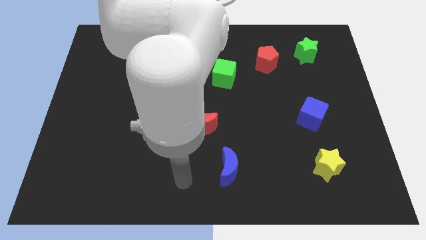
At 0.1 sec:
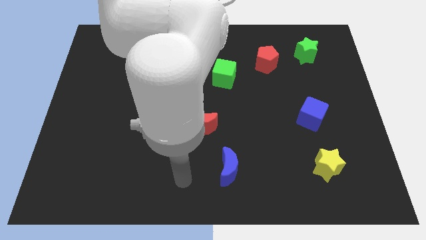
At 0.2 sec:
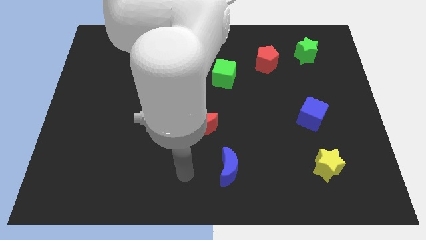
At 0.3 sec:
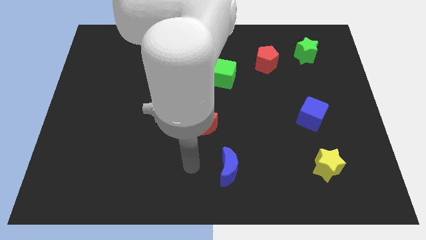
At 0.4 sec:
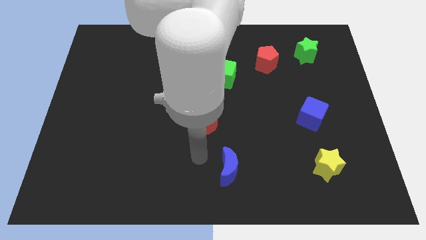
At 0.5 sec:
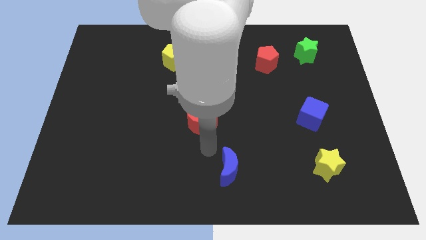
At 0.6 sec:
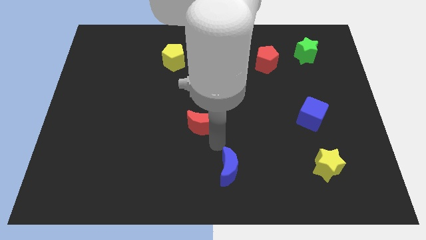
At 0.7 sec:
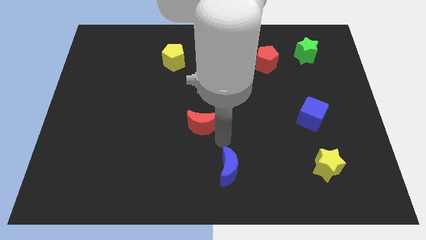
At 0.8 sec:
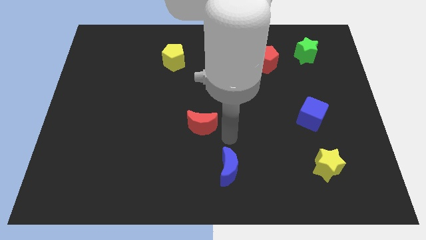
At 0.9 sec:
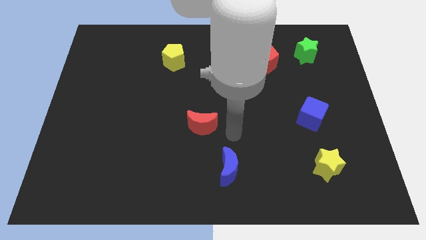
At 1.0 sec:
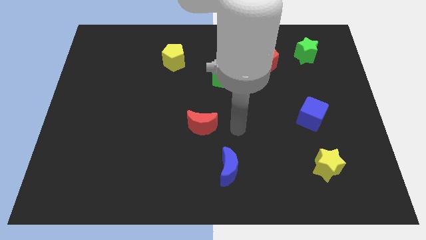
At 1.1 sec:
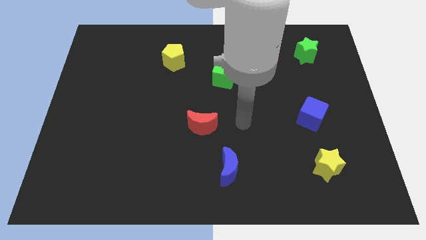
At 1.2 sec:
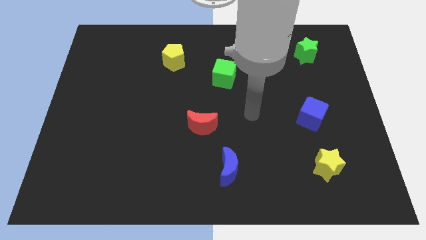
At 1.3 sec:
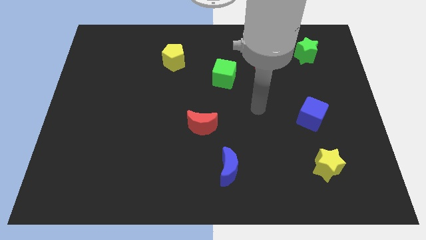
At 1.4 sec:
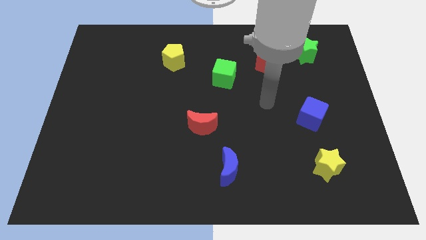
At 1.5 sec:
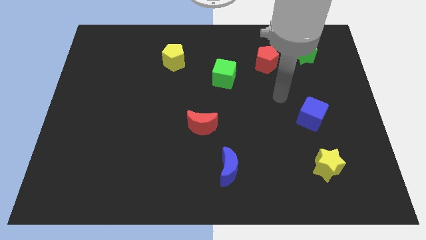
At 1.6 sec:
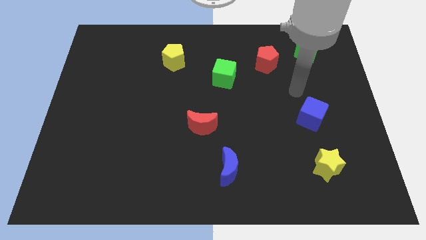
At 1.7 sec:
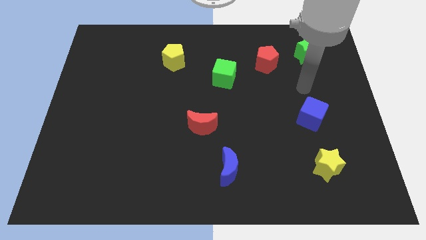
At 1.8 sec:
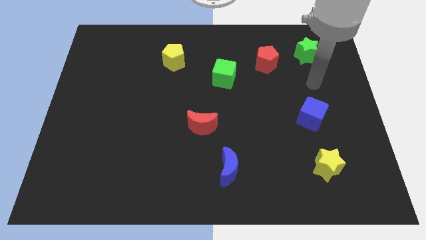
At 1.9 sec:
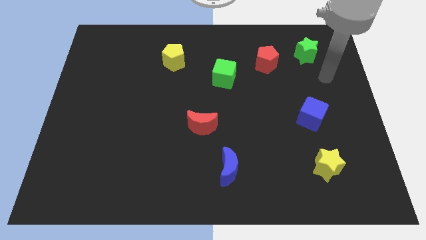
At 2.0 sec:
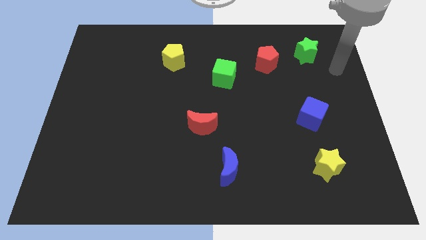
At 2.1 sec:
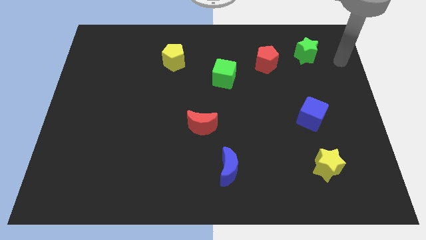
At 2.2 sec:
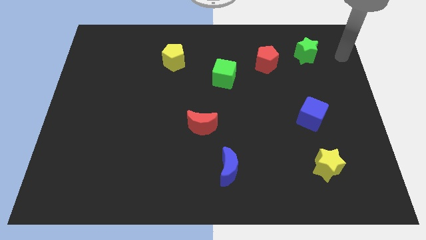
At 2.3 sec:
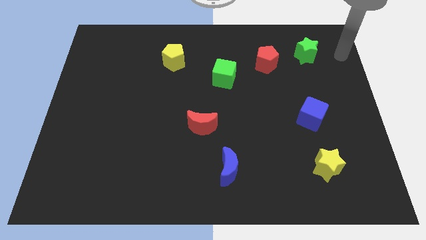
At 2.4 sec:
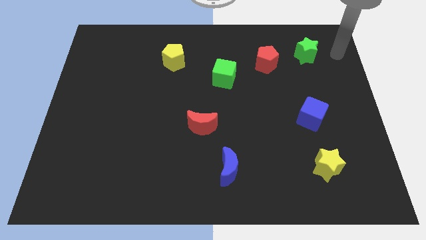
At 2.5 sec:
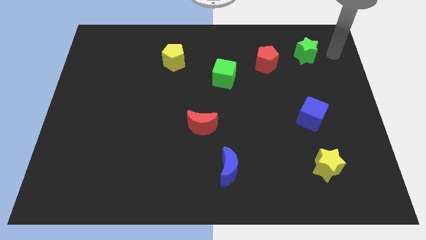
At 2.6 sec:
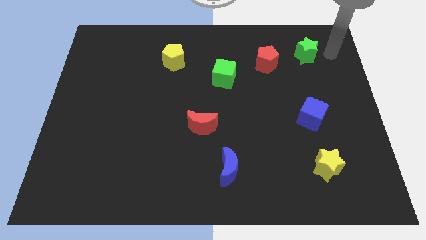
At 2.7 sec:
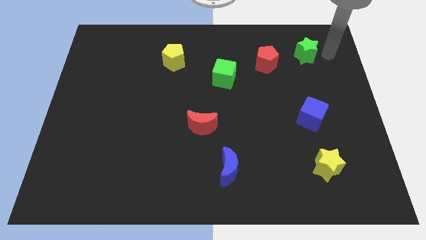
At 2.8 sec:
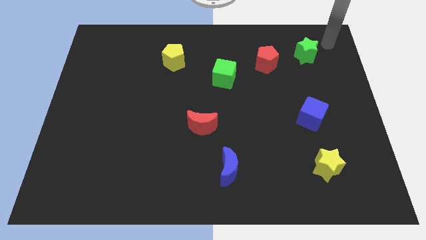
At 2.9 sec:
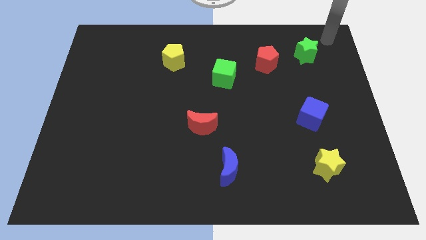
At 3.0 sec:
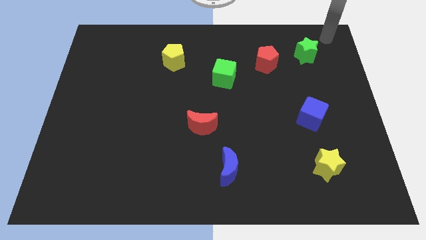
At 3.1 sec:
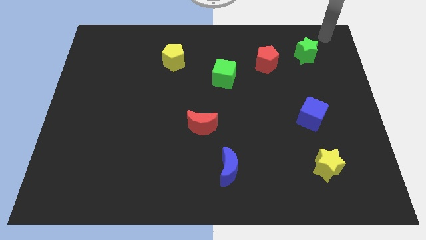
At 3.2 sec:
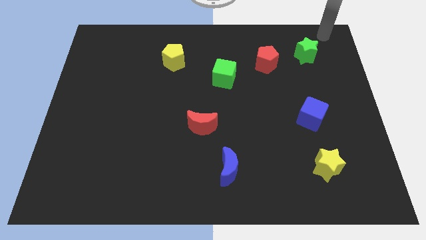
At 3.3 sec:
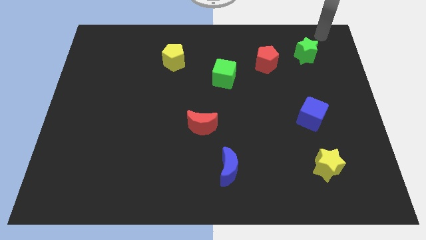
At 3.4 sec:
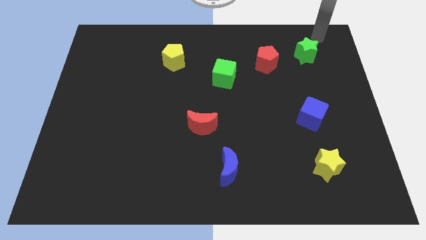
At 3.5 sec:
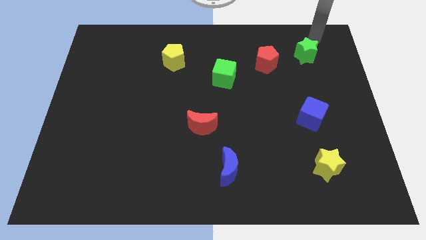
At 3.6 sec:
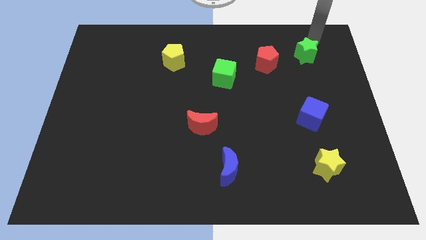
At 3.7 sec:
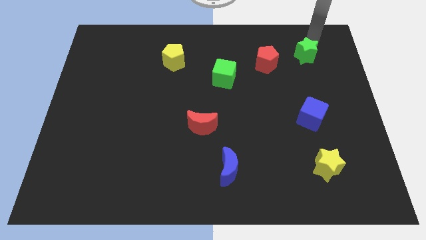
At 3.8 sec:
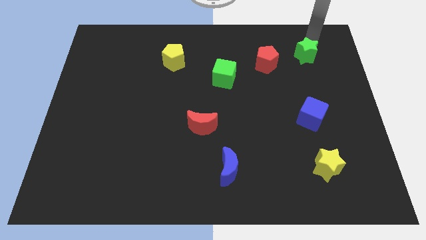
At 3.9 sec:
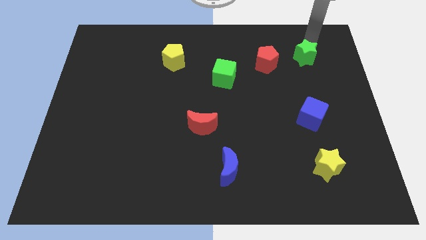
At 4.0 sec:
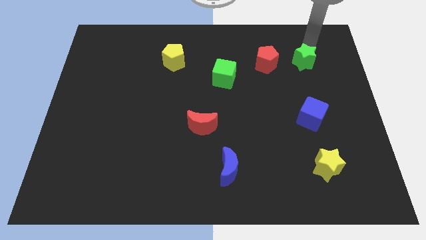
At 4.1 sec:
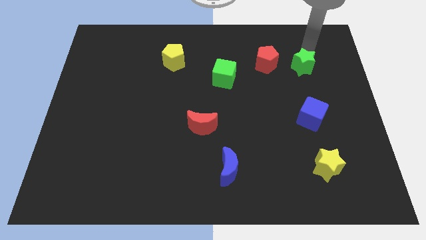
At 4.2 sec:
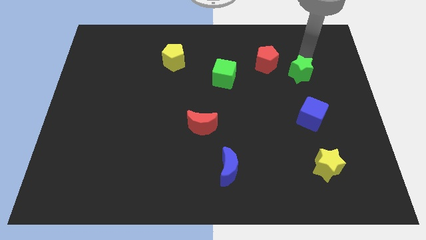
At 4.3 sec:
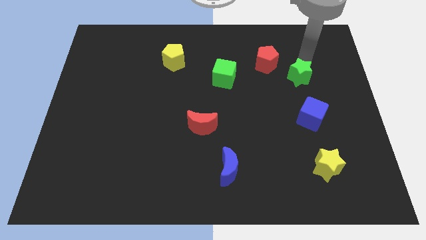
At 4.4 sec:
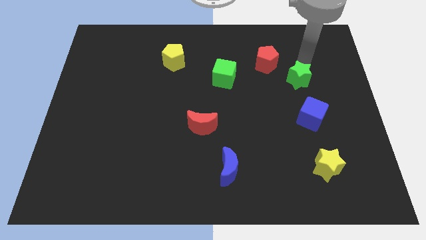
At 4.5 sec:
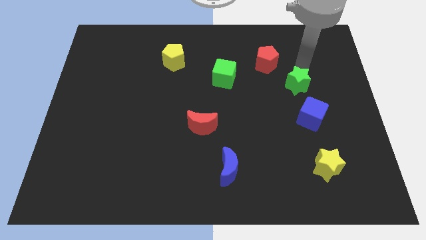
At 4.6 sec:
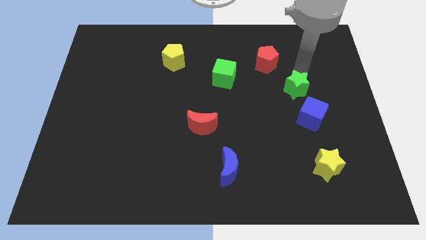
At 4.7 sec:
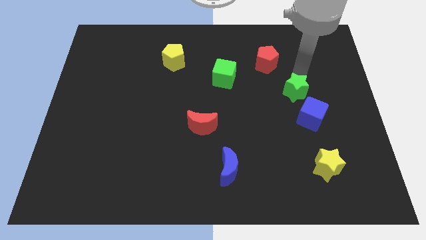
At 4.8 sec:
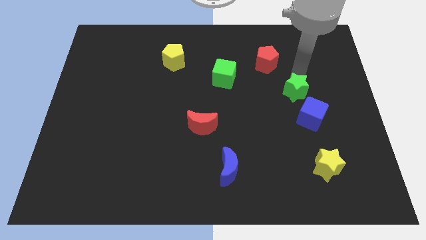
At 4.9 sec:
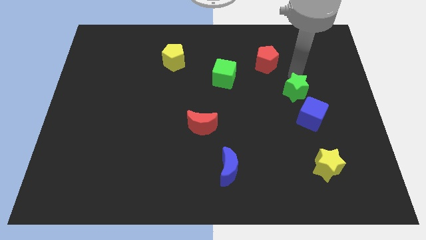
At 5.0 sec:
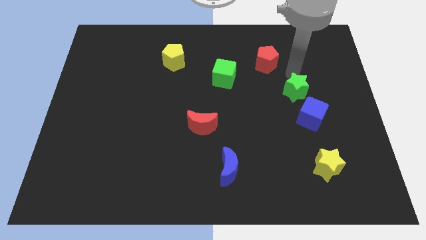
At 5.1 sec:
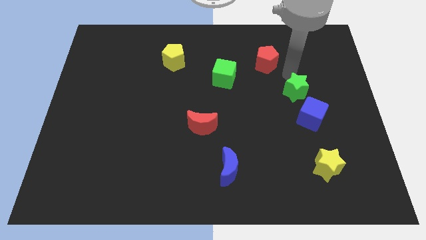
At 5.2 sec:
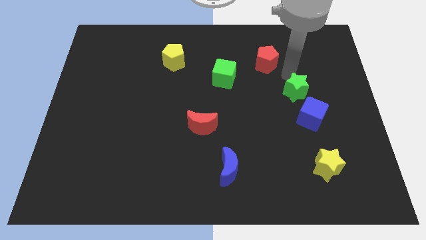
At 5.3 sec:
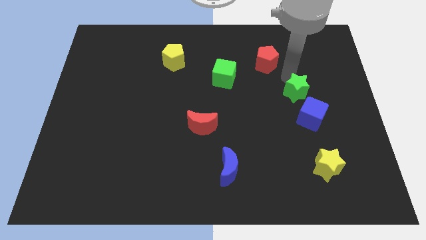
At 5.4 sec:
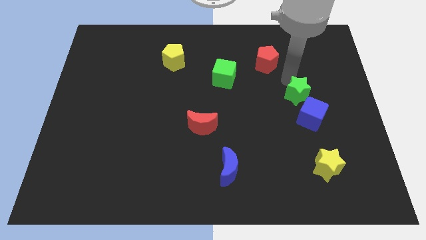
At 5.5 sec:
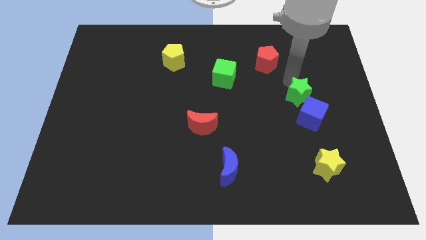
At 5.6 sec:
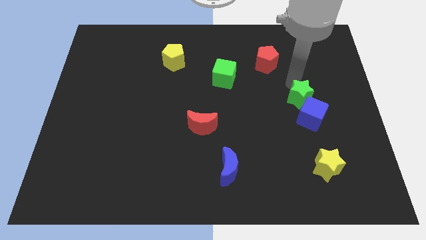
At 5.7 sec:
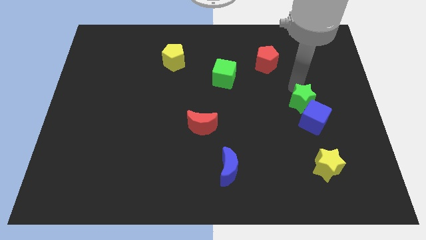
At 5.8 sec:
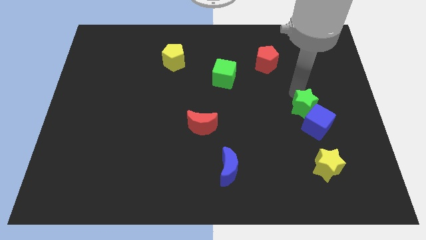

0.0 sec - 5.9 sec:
slide the green star towards the blue cube

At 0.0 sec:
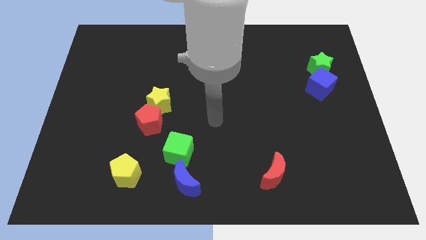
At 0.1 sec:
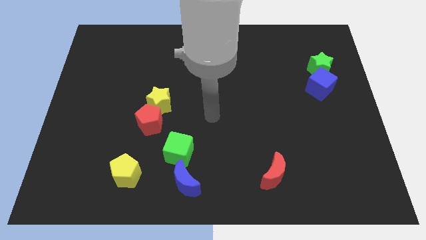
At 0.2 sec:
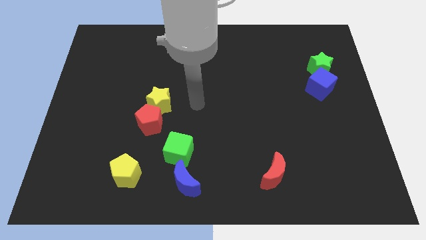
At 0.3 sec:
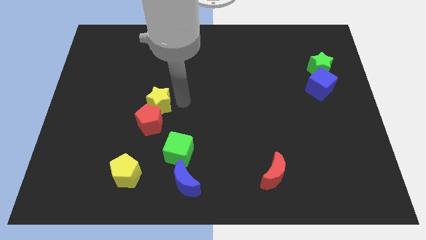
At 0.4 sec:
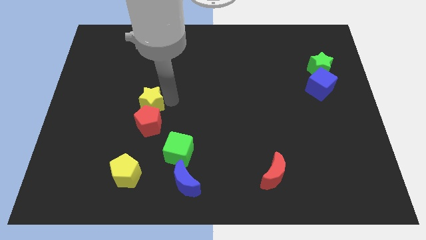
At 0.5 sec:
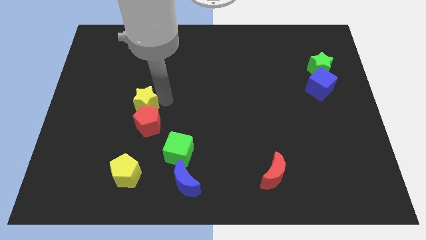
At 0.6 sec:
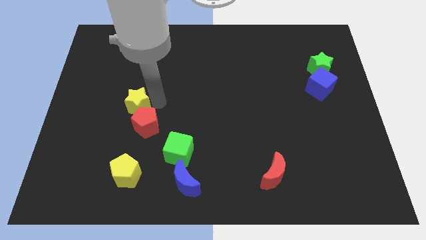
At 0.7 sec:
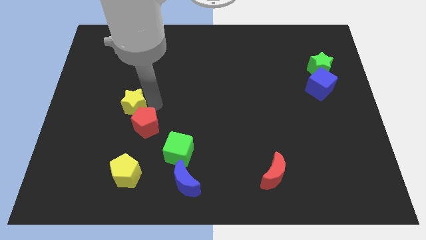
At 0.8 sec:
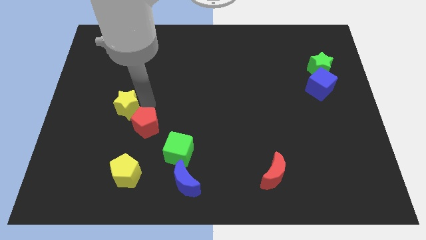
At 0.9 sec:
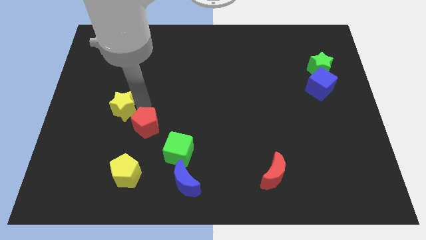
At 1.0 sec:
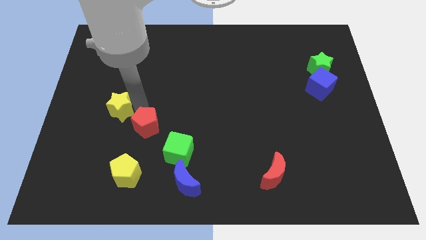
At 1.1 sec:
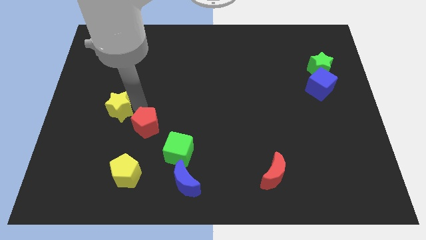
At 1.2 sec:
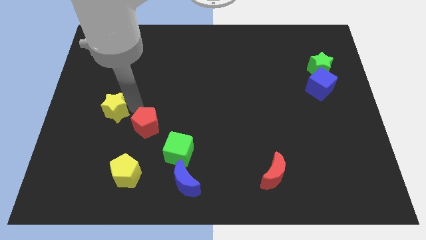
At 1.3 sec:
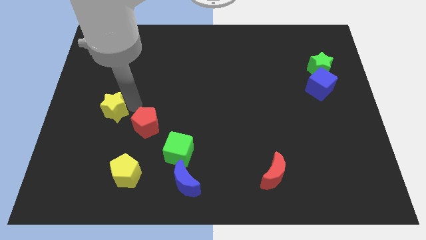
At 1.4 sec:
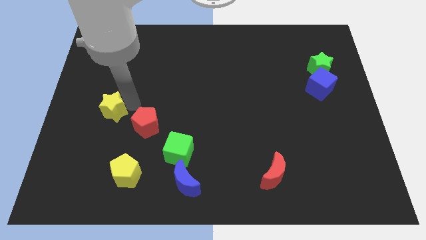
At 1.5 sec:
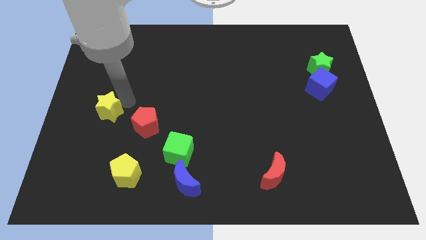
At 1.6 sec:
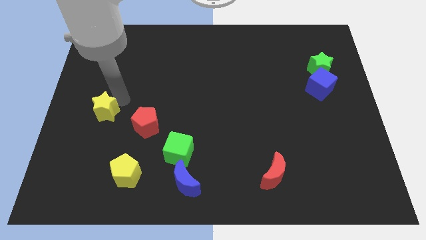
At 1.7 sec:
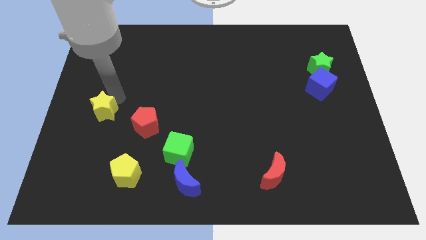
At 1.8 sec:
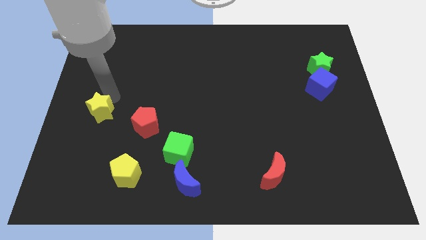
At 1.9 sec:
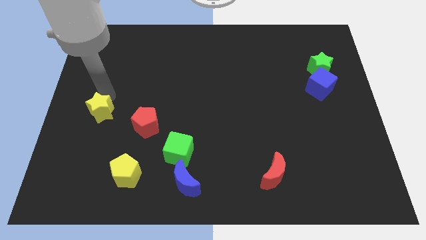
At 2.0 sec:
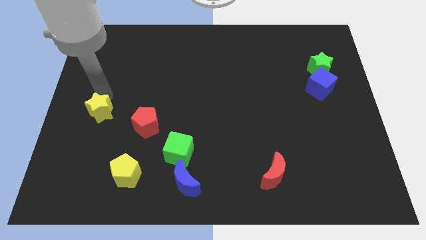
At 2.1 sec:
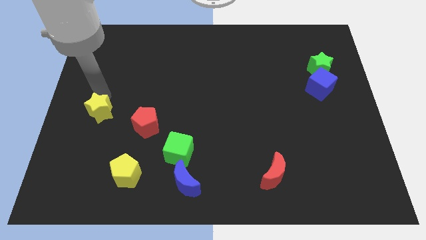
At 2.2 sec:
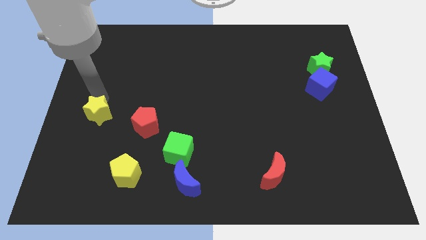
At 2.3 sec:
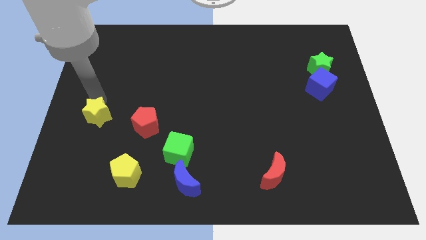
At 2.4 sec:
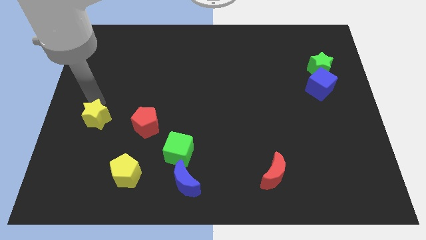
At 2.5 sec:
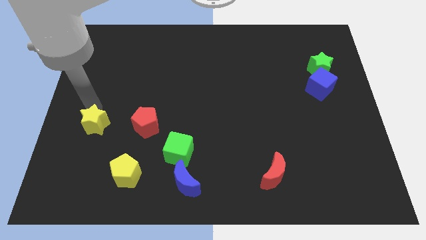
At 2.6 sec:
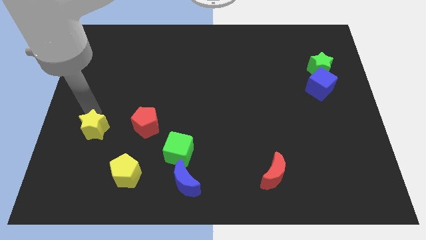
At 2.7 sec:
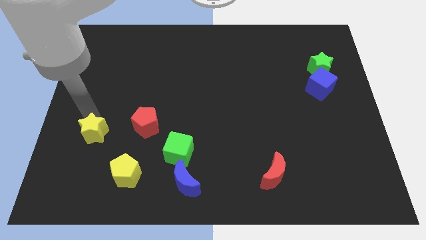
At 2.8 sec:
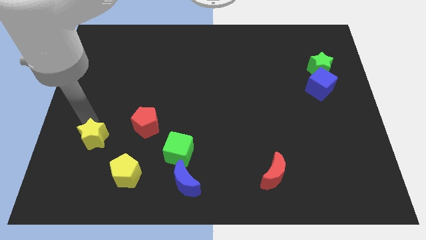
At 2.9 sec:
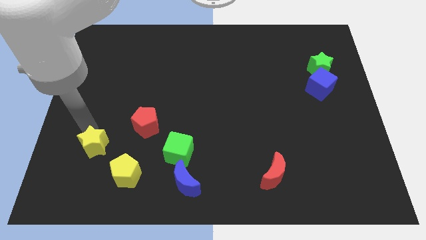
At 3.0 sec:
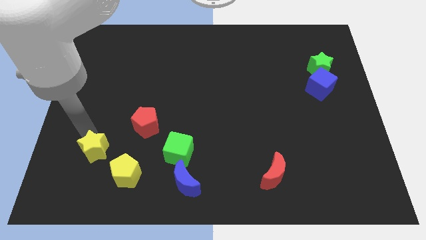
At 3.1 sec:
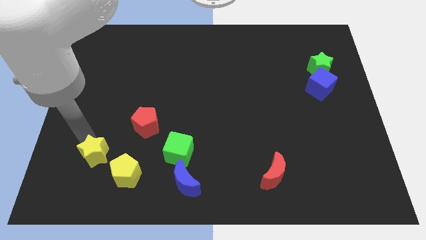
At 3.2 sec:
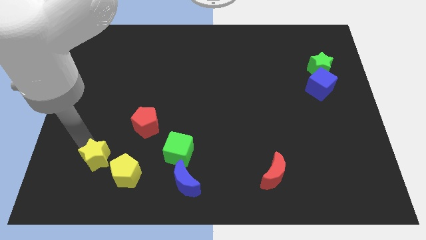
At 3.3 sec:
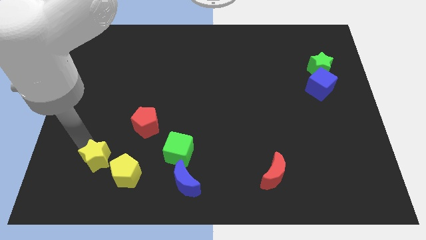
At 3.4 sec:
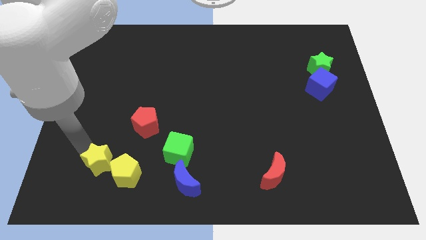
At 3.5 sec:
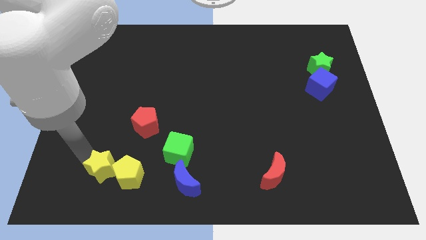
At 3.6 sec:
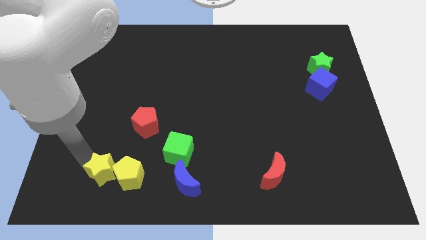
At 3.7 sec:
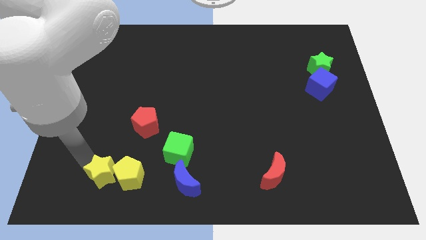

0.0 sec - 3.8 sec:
move the yellow star next to the yellow pentagon
